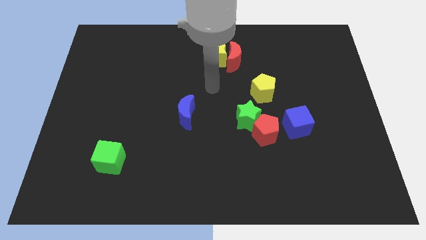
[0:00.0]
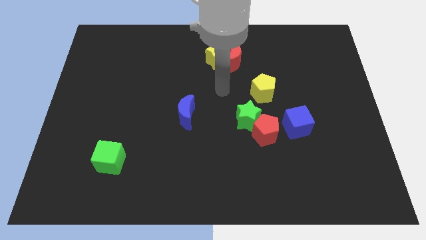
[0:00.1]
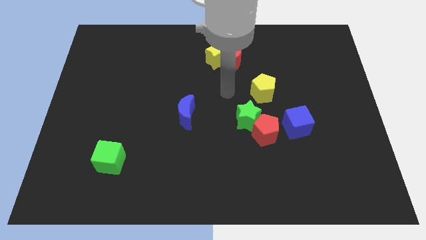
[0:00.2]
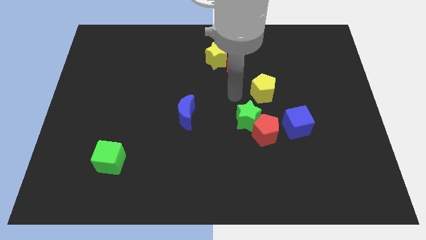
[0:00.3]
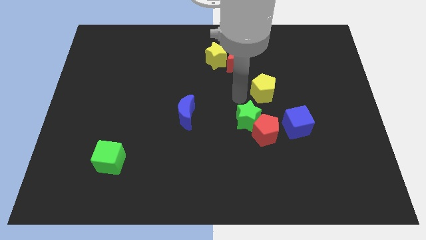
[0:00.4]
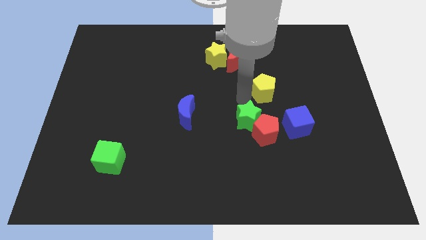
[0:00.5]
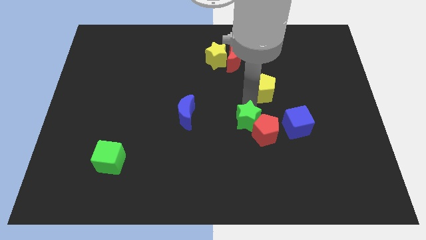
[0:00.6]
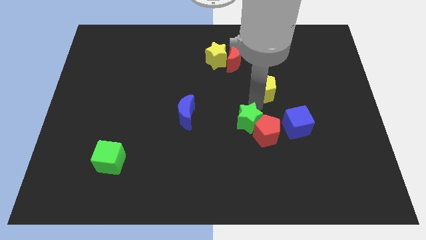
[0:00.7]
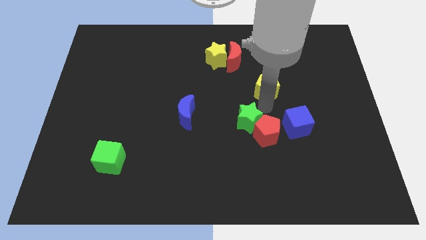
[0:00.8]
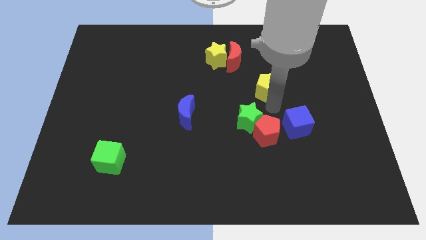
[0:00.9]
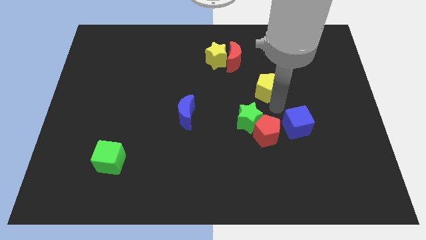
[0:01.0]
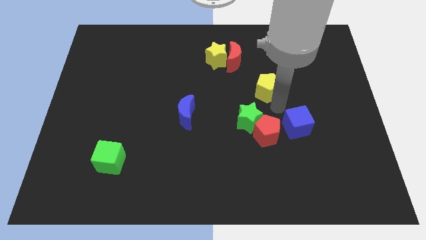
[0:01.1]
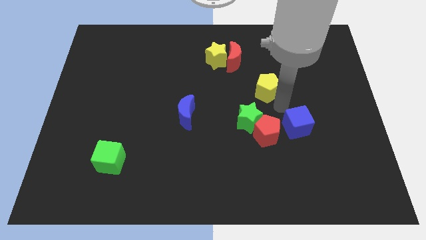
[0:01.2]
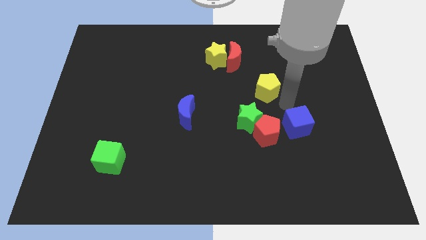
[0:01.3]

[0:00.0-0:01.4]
place your arm in between the yellow pentagon and blue cube

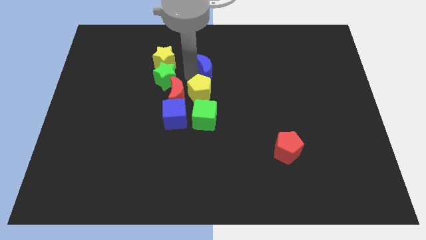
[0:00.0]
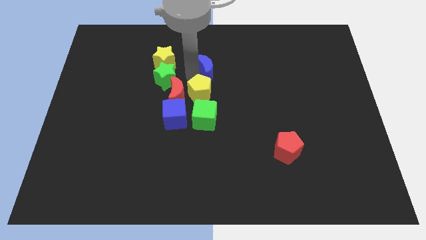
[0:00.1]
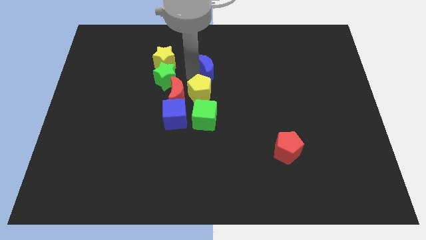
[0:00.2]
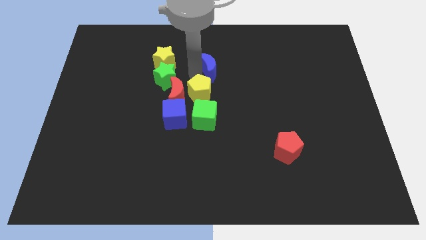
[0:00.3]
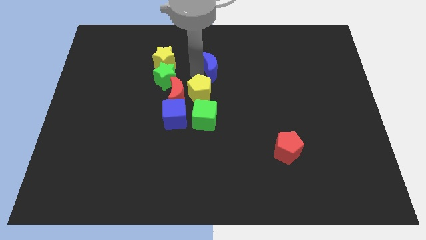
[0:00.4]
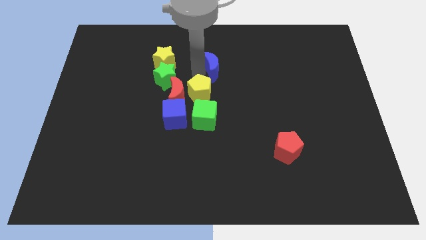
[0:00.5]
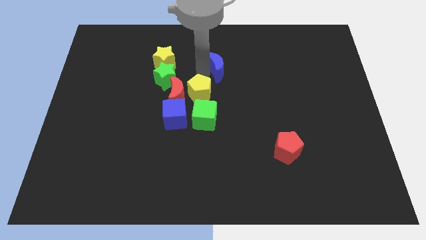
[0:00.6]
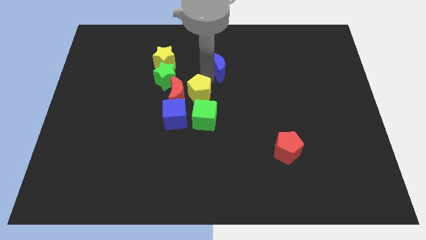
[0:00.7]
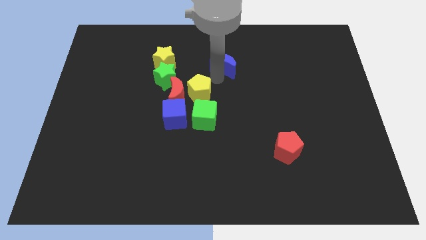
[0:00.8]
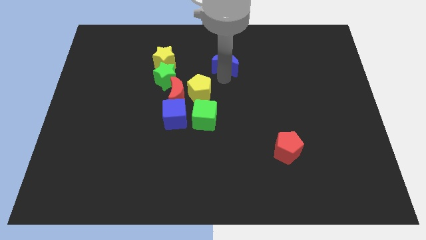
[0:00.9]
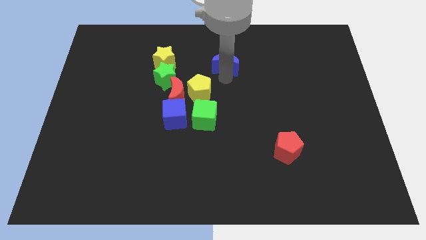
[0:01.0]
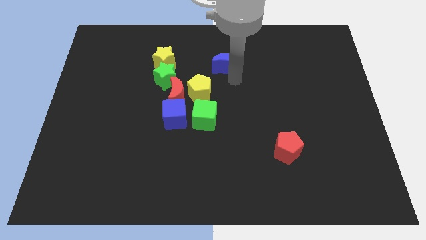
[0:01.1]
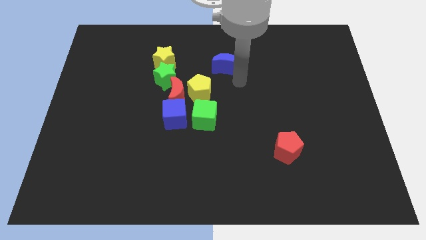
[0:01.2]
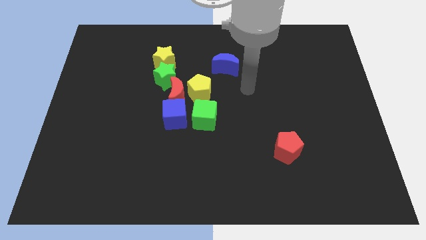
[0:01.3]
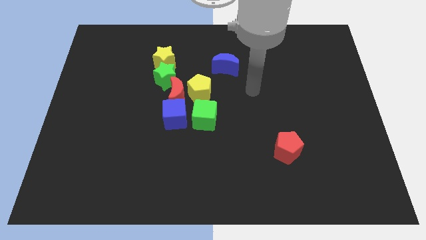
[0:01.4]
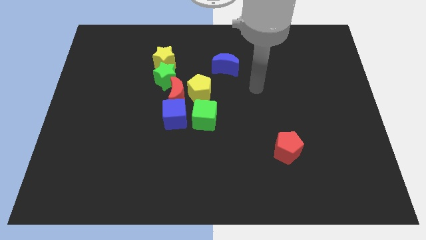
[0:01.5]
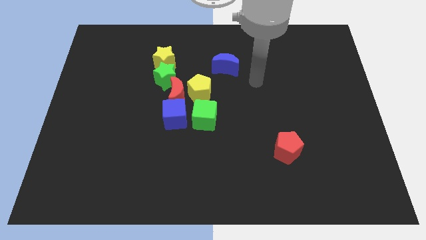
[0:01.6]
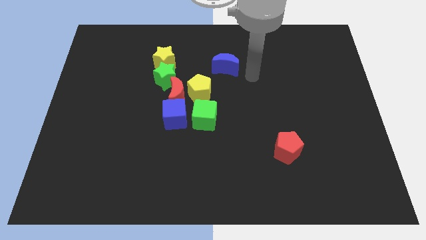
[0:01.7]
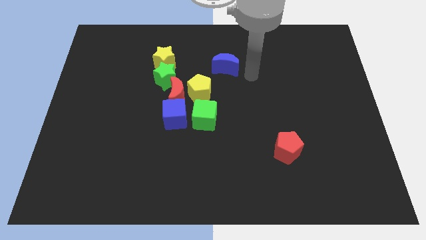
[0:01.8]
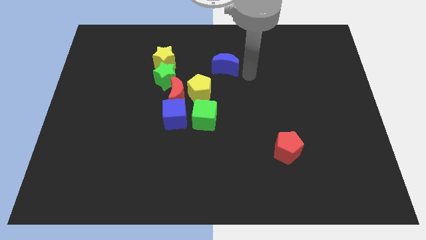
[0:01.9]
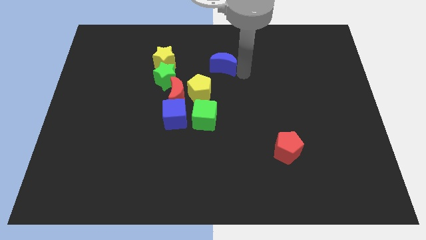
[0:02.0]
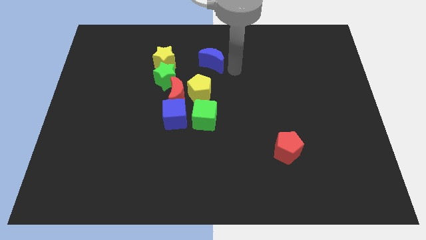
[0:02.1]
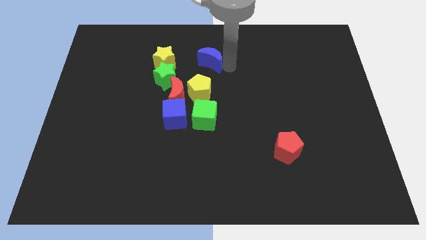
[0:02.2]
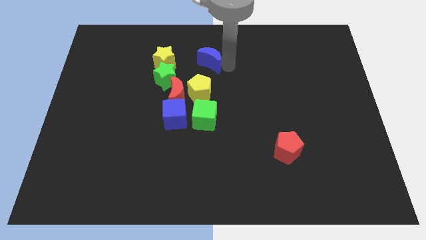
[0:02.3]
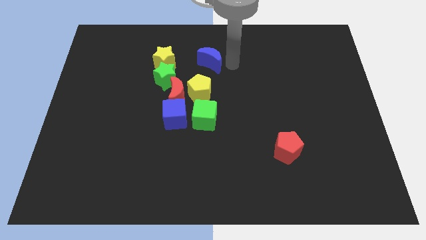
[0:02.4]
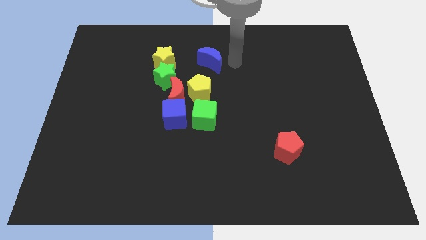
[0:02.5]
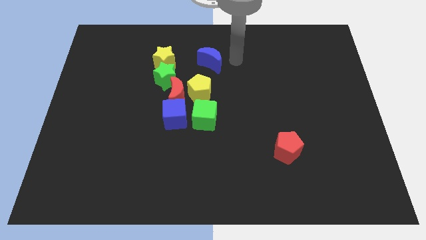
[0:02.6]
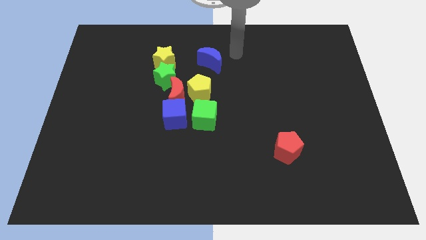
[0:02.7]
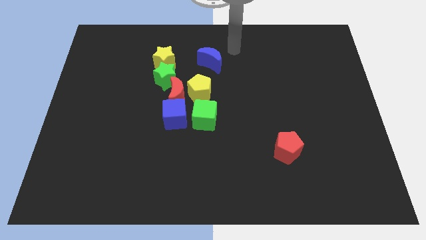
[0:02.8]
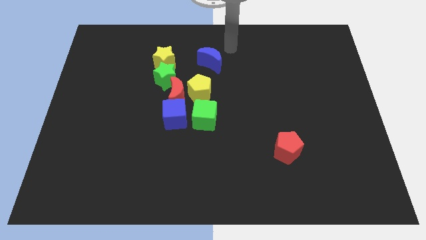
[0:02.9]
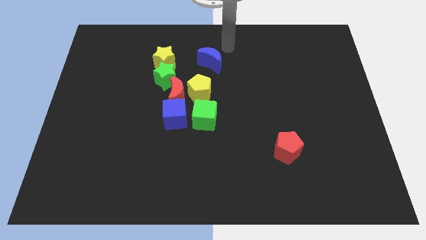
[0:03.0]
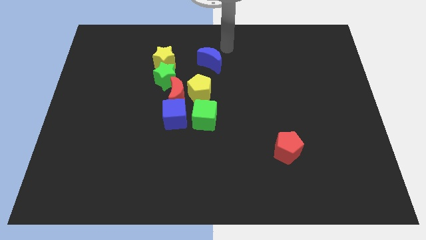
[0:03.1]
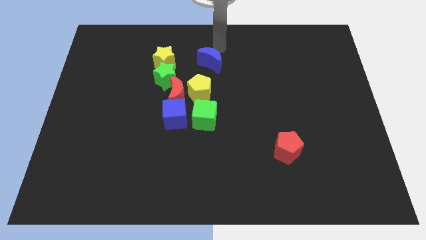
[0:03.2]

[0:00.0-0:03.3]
move the blue crescent away from the yellow pentagon

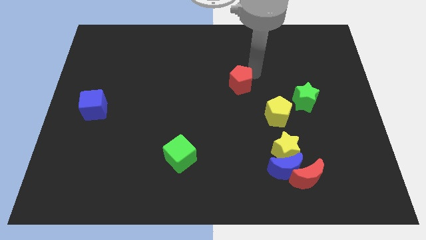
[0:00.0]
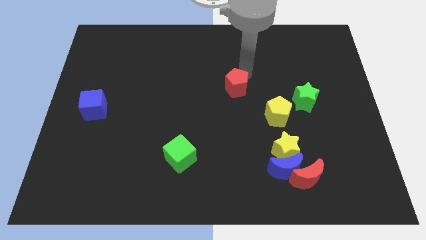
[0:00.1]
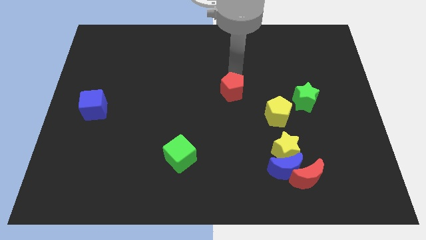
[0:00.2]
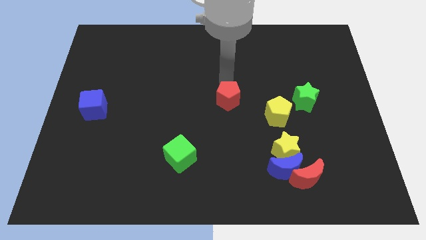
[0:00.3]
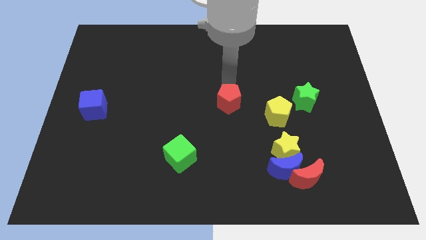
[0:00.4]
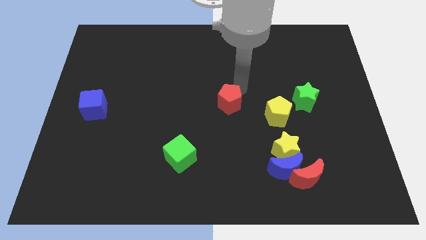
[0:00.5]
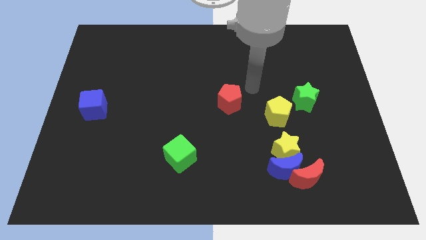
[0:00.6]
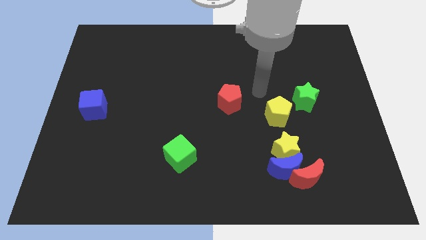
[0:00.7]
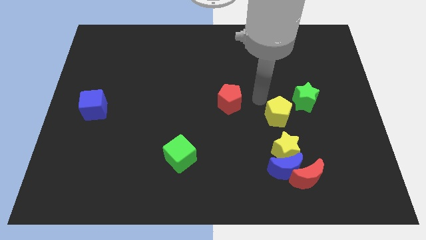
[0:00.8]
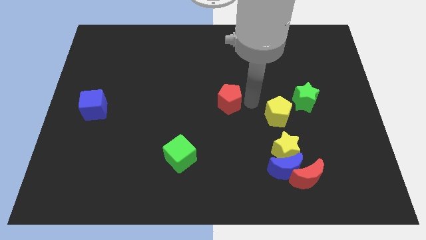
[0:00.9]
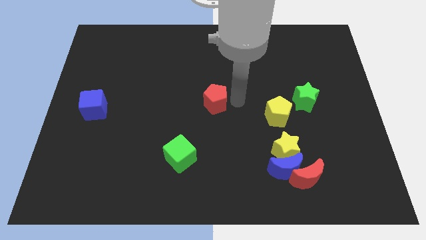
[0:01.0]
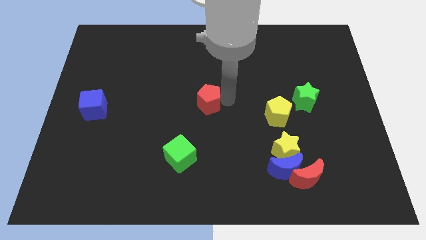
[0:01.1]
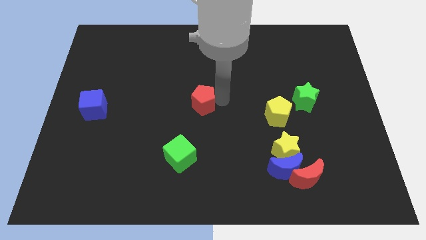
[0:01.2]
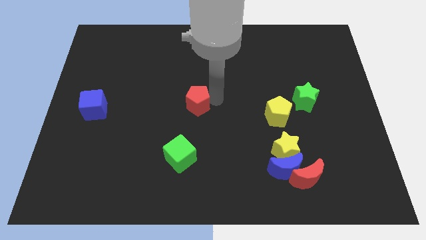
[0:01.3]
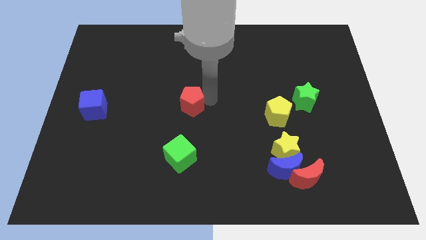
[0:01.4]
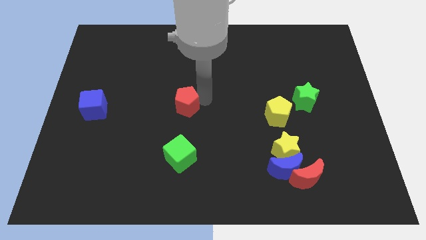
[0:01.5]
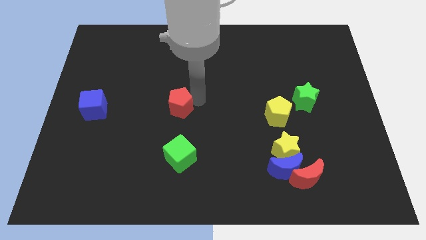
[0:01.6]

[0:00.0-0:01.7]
place the red pentagon to the top side of the green cube

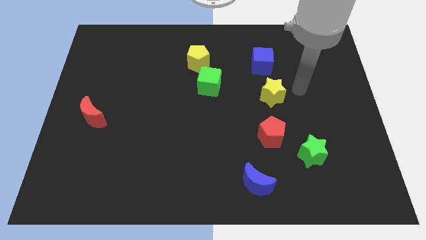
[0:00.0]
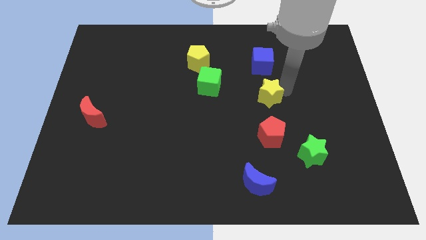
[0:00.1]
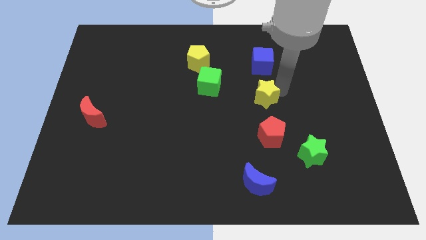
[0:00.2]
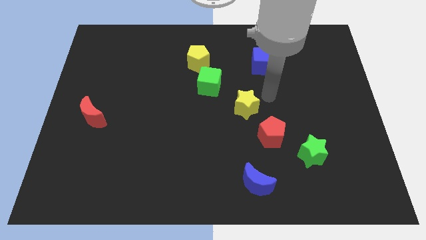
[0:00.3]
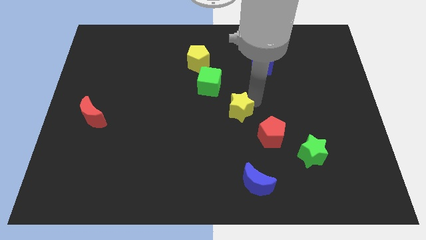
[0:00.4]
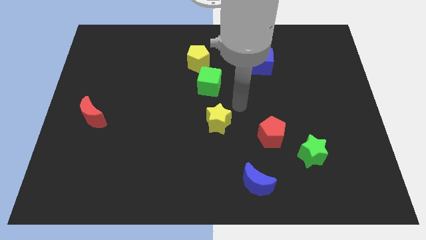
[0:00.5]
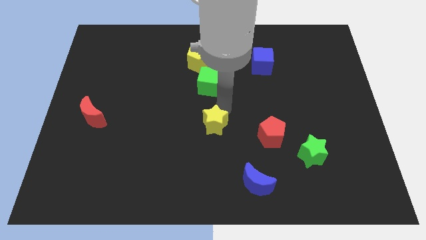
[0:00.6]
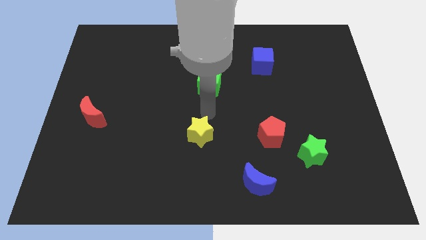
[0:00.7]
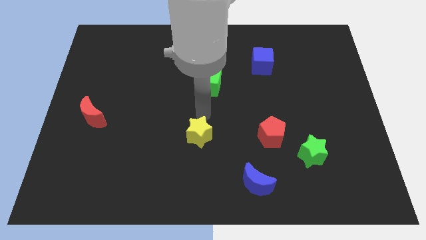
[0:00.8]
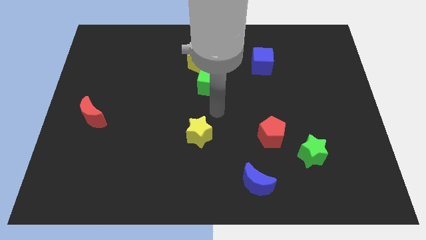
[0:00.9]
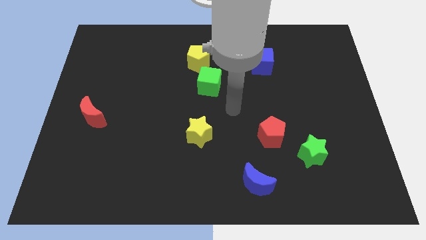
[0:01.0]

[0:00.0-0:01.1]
move the yellow star to the horizontal left side of the red pentagon

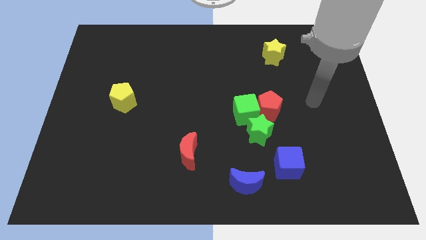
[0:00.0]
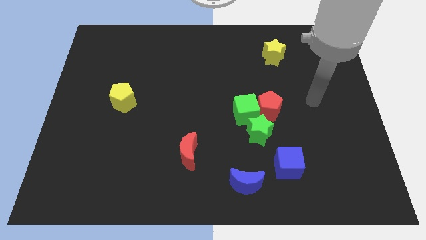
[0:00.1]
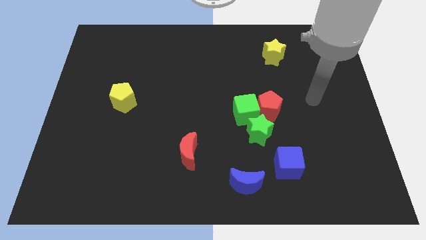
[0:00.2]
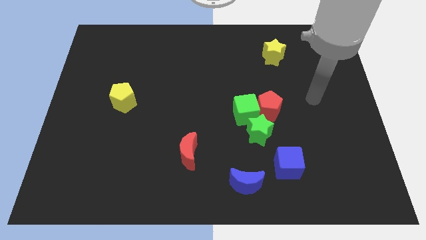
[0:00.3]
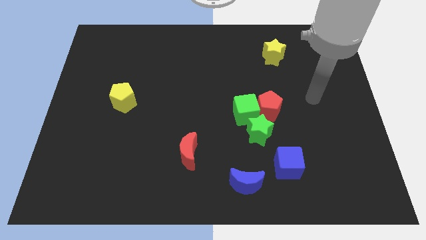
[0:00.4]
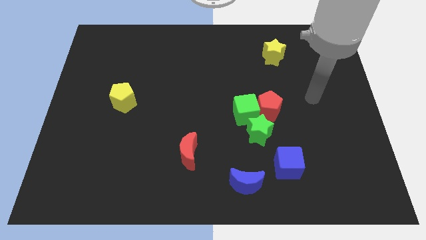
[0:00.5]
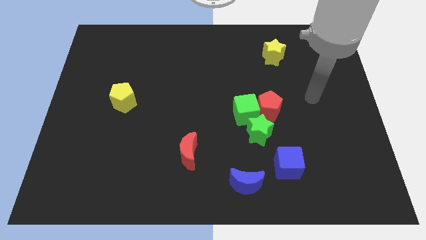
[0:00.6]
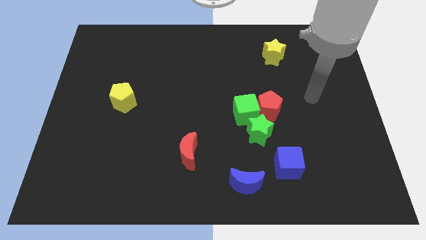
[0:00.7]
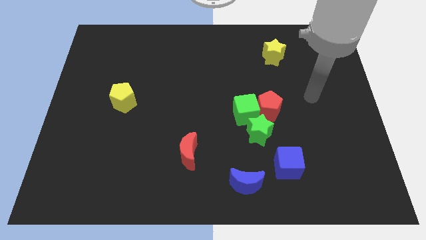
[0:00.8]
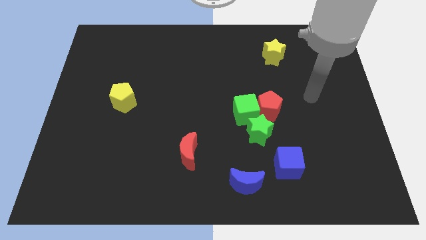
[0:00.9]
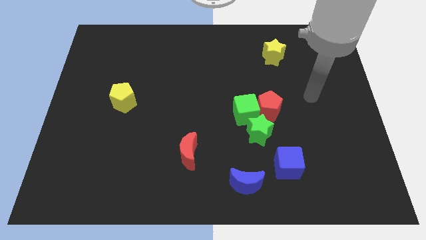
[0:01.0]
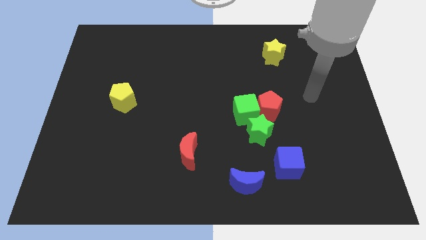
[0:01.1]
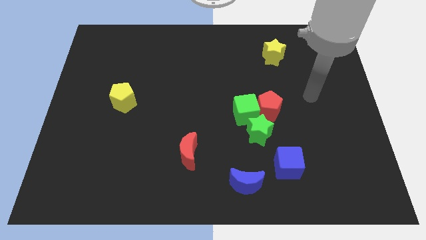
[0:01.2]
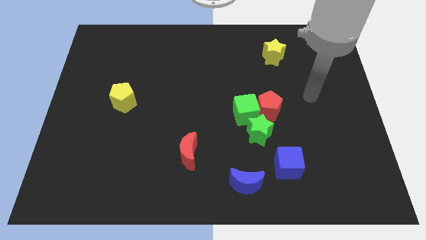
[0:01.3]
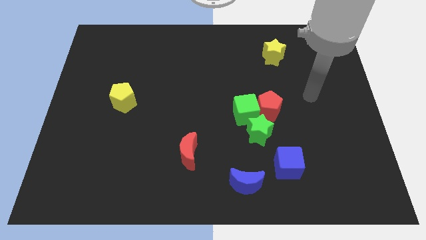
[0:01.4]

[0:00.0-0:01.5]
move your arm towards the yellow star
